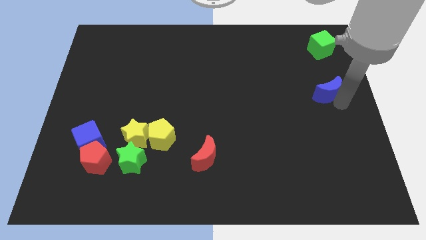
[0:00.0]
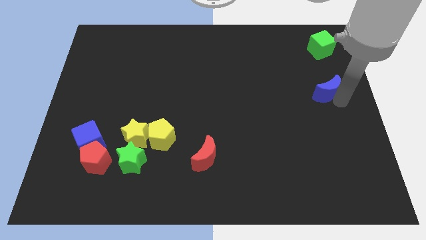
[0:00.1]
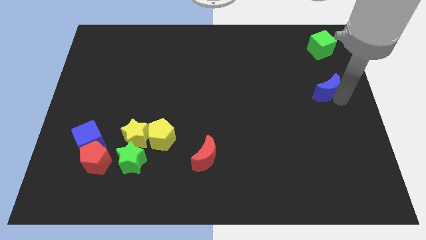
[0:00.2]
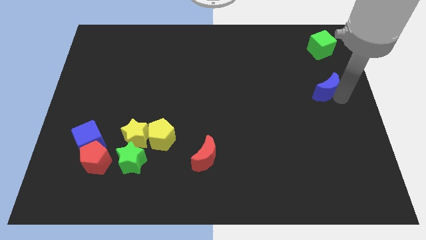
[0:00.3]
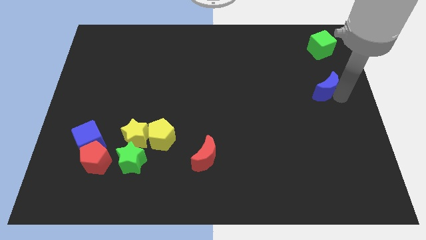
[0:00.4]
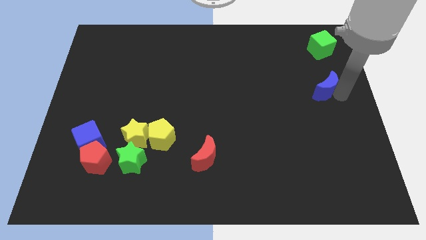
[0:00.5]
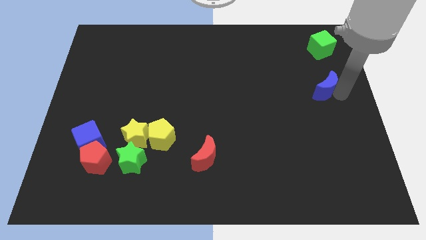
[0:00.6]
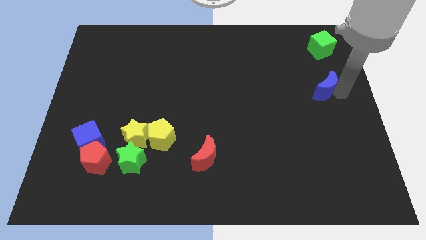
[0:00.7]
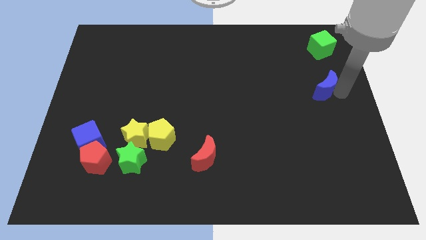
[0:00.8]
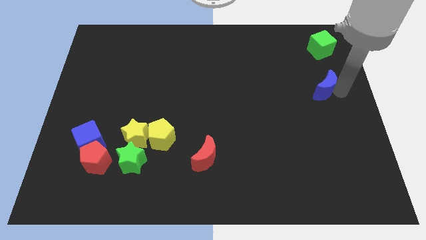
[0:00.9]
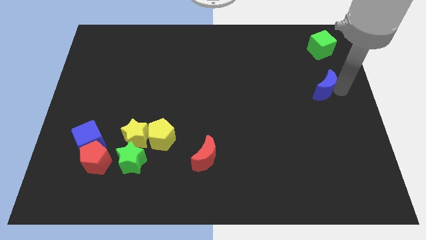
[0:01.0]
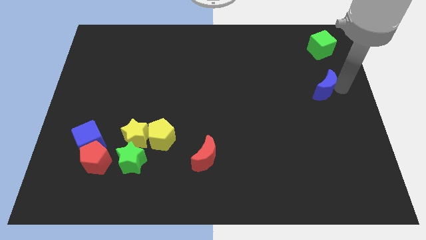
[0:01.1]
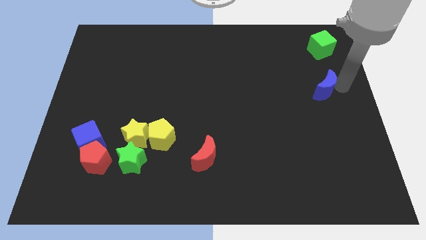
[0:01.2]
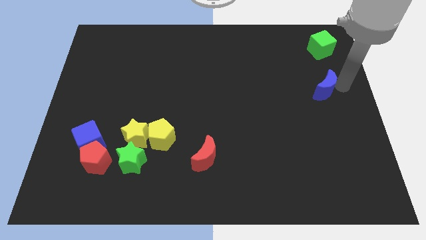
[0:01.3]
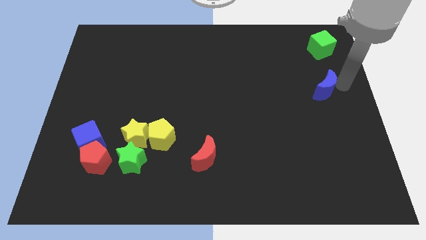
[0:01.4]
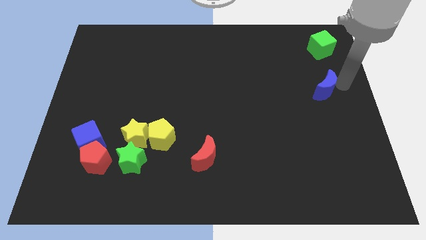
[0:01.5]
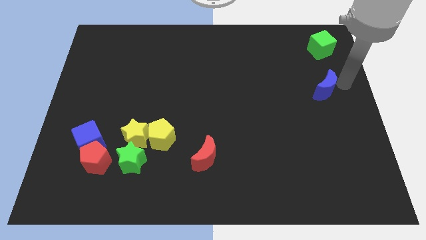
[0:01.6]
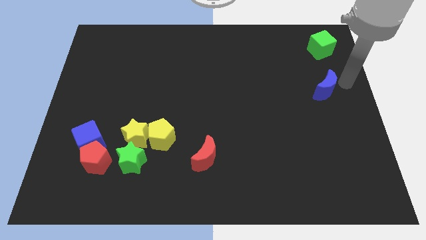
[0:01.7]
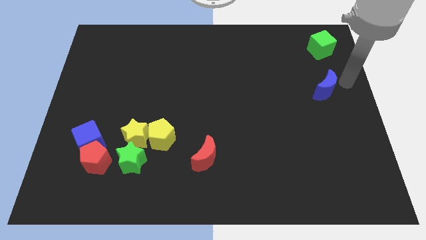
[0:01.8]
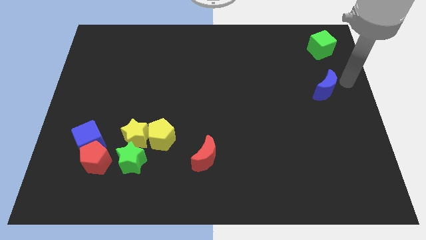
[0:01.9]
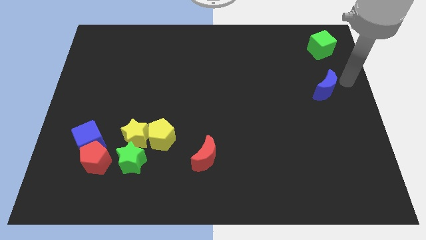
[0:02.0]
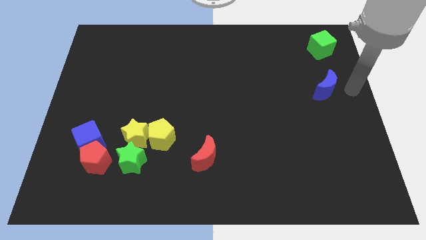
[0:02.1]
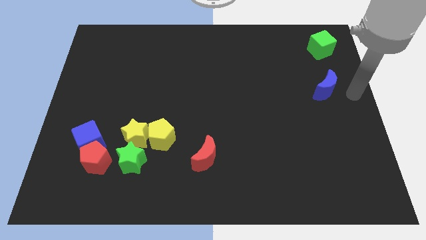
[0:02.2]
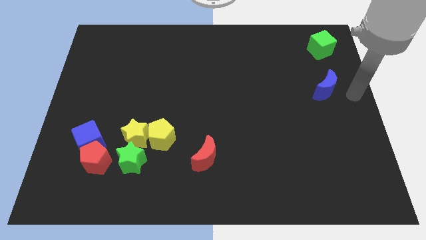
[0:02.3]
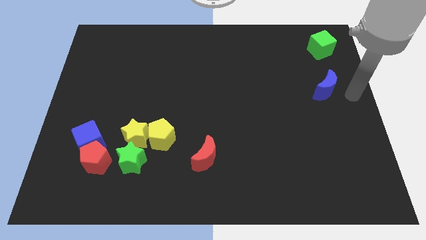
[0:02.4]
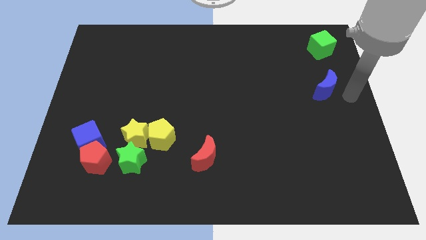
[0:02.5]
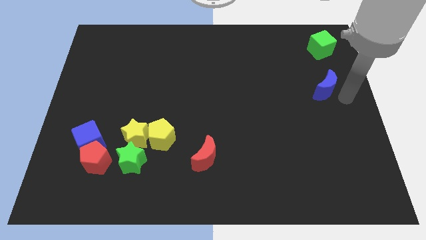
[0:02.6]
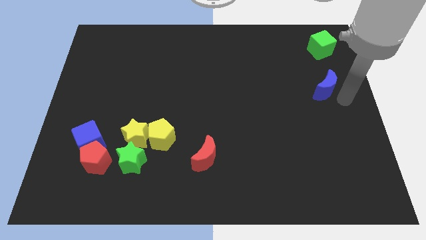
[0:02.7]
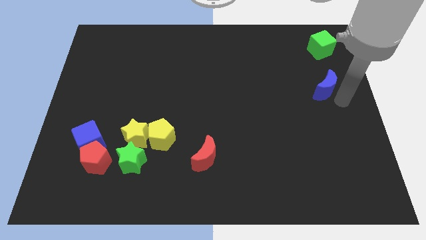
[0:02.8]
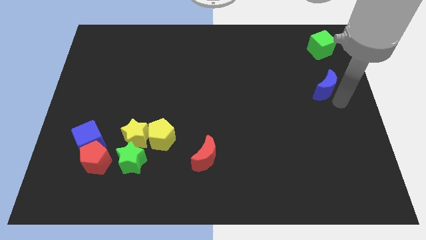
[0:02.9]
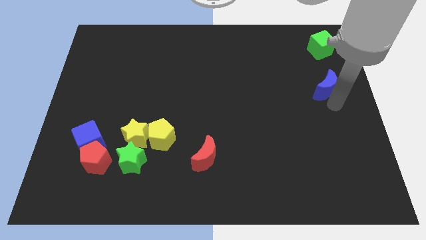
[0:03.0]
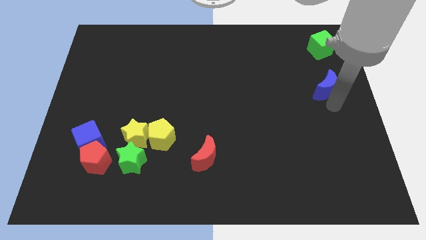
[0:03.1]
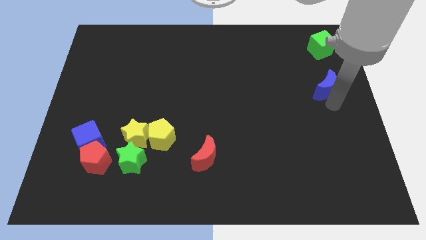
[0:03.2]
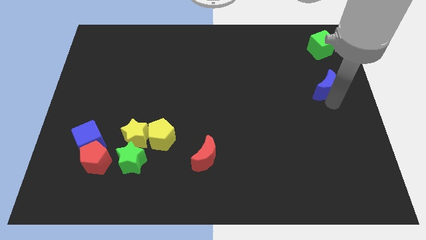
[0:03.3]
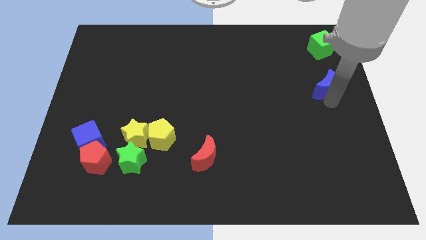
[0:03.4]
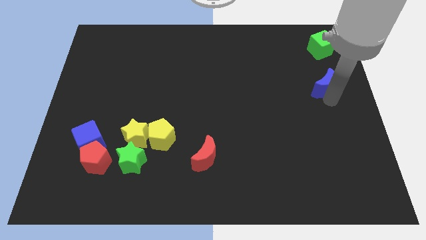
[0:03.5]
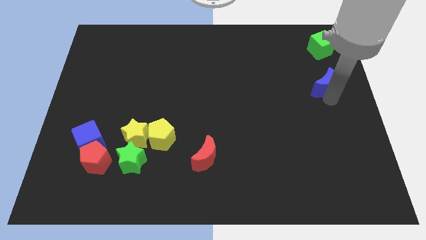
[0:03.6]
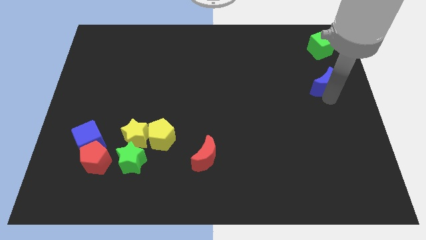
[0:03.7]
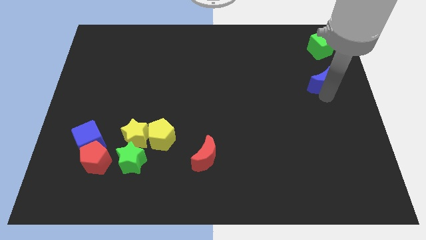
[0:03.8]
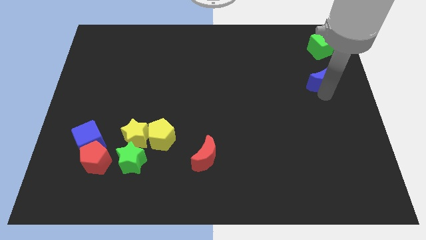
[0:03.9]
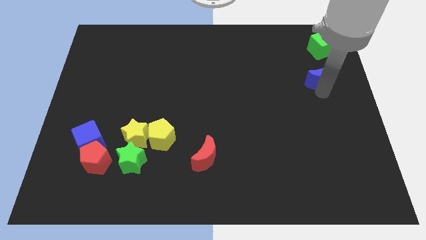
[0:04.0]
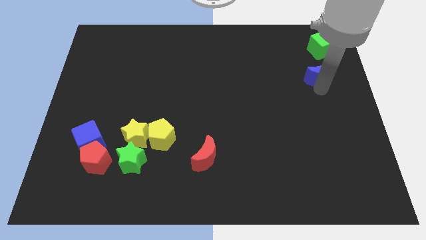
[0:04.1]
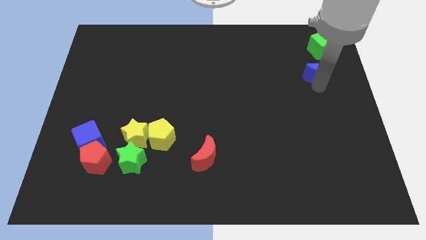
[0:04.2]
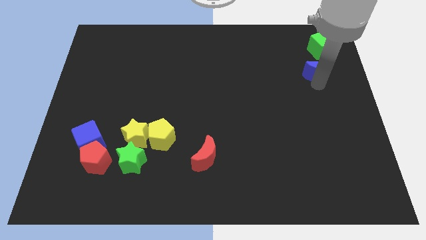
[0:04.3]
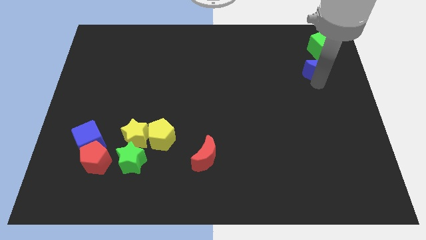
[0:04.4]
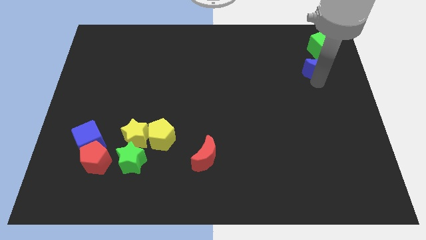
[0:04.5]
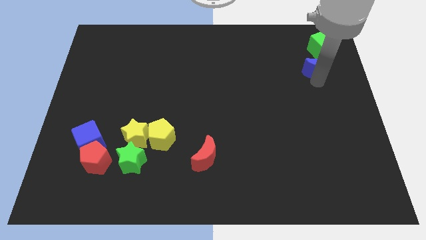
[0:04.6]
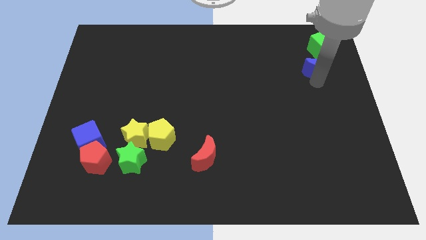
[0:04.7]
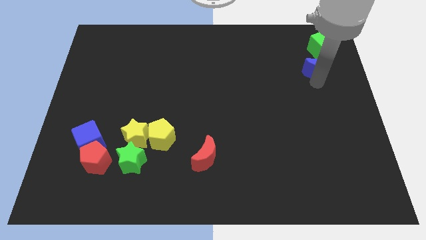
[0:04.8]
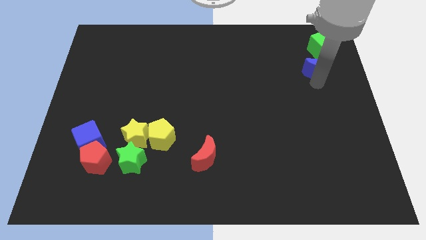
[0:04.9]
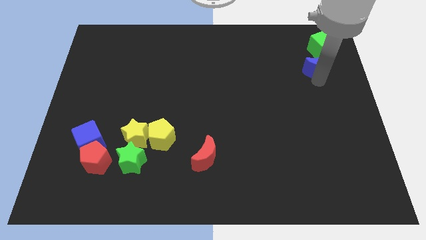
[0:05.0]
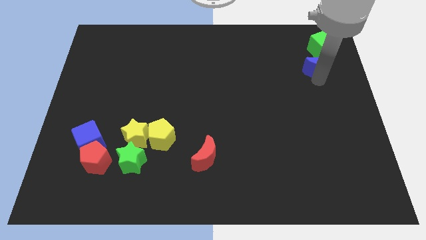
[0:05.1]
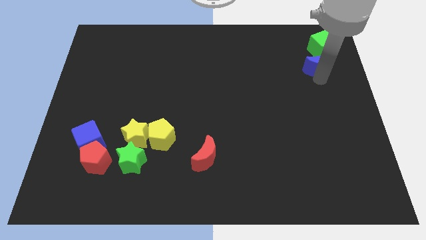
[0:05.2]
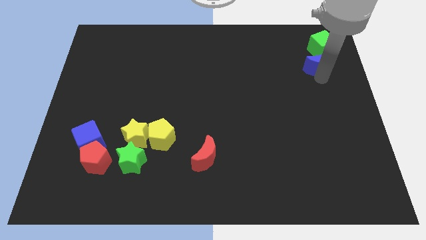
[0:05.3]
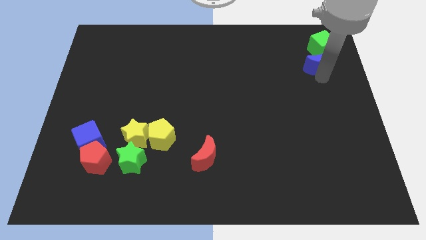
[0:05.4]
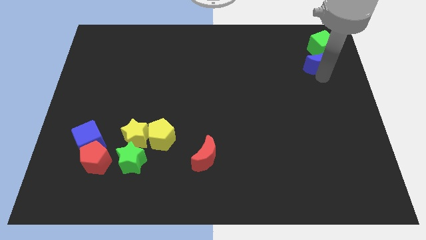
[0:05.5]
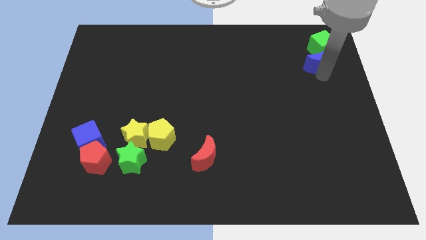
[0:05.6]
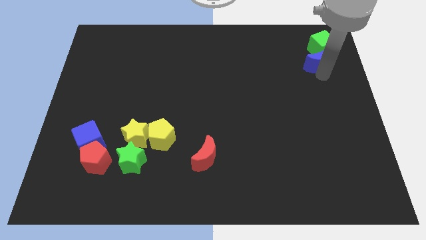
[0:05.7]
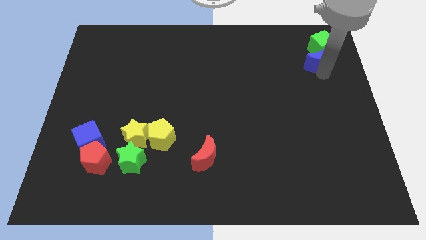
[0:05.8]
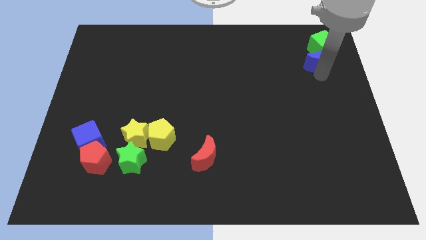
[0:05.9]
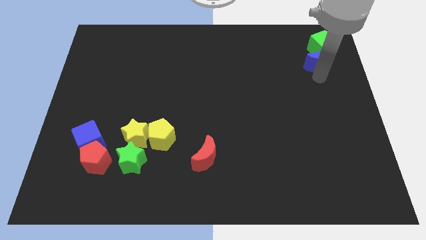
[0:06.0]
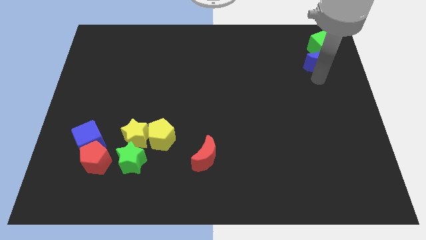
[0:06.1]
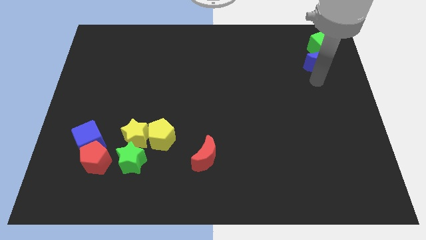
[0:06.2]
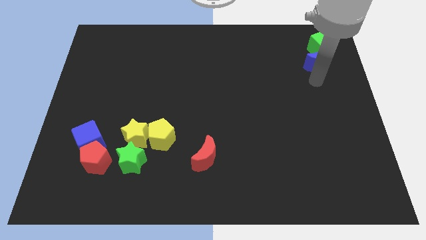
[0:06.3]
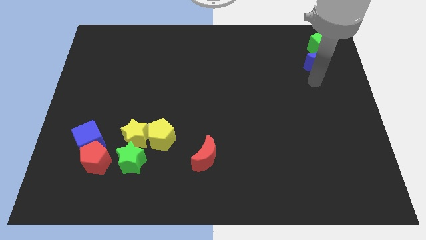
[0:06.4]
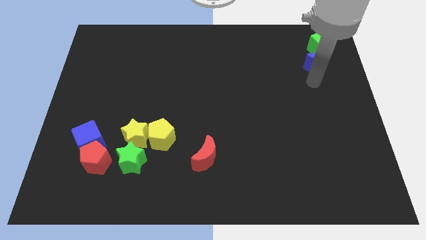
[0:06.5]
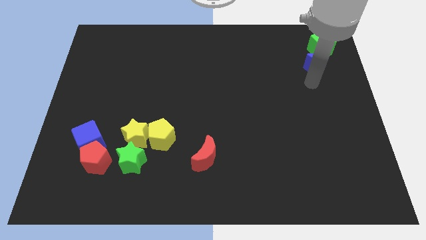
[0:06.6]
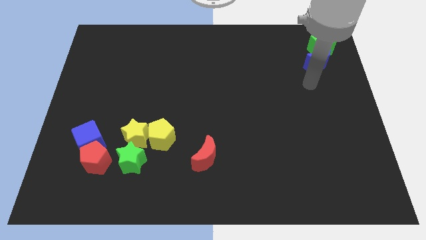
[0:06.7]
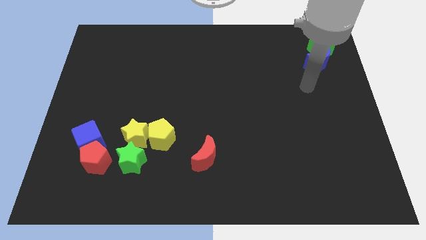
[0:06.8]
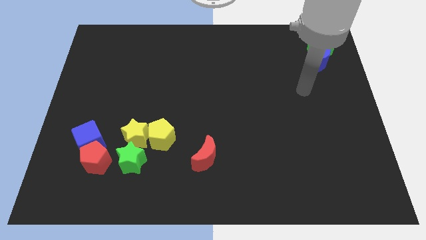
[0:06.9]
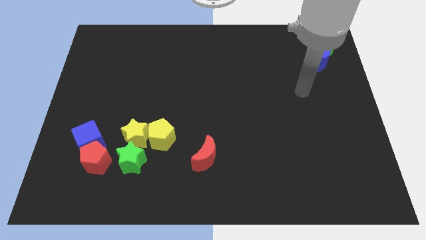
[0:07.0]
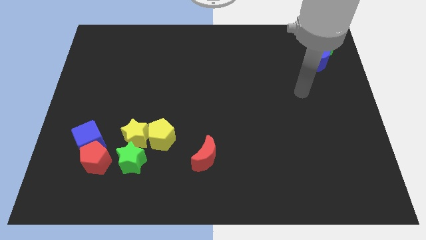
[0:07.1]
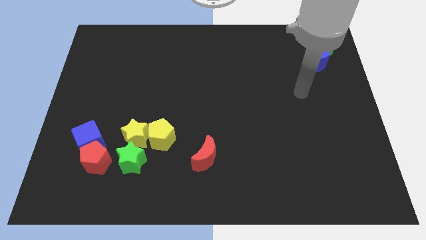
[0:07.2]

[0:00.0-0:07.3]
move the blue moon to the bottom of the green cube

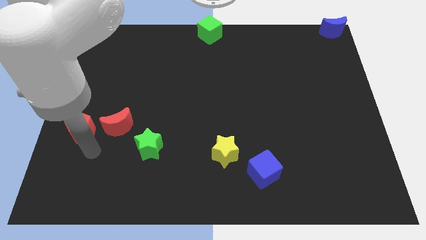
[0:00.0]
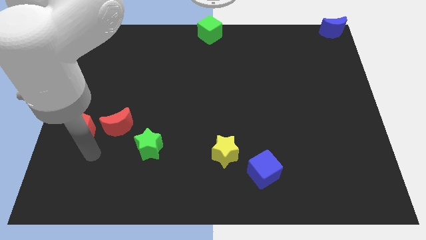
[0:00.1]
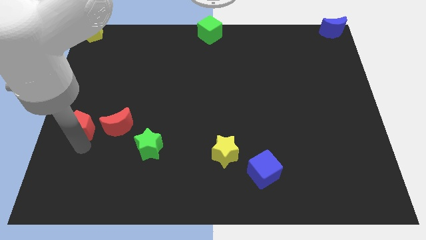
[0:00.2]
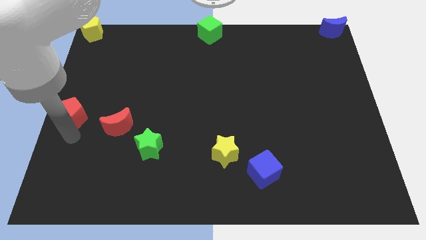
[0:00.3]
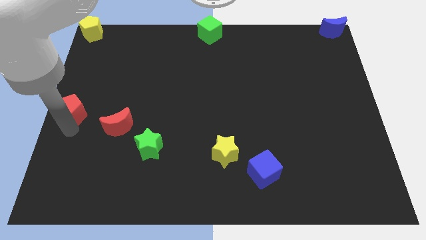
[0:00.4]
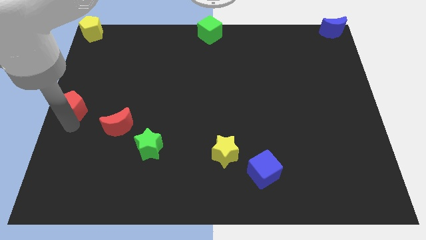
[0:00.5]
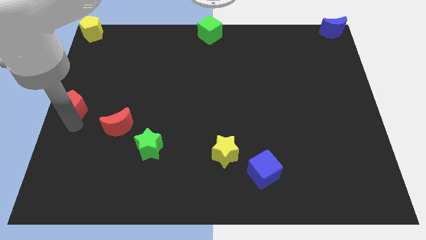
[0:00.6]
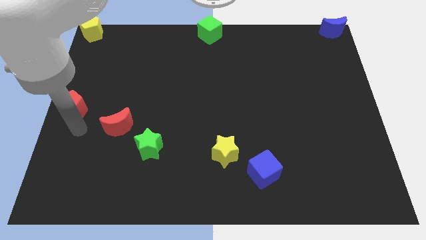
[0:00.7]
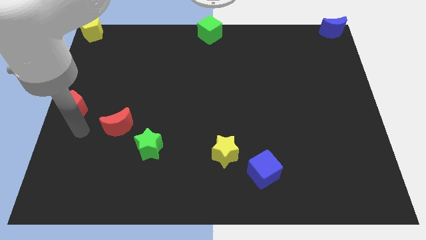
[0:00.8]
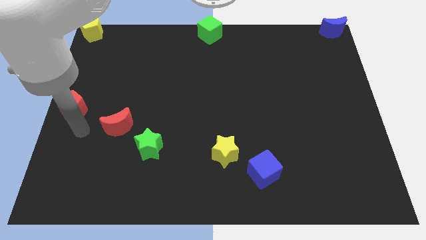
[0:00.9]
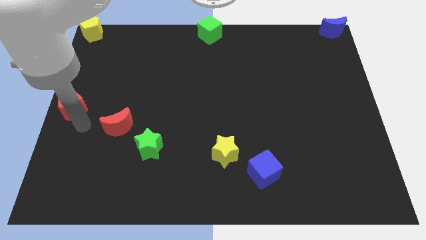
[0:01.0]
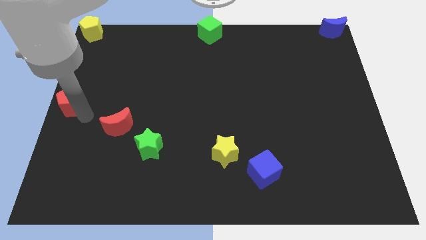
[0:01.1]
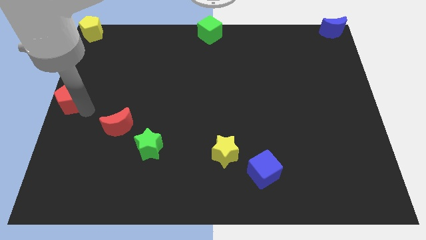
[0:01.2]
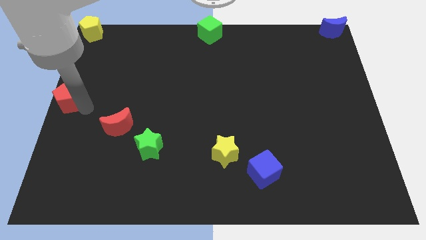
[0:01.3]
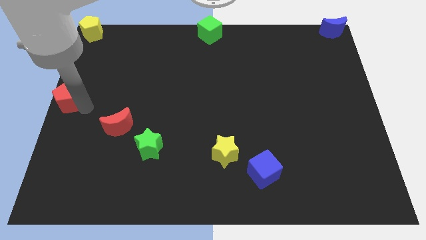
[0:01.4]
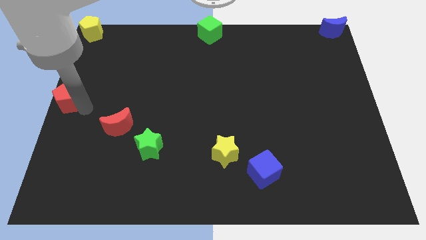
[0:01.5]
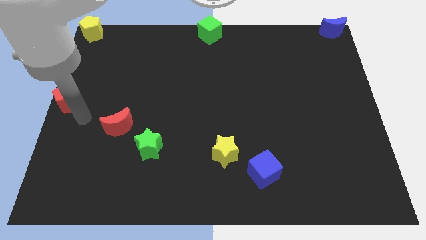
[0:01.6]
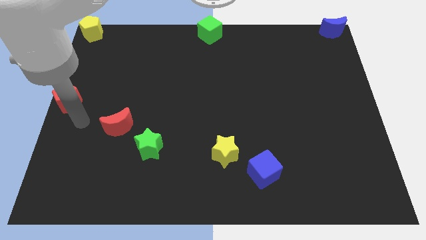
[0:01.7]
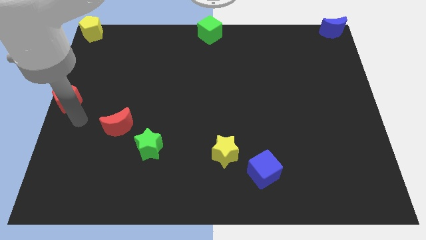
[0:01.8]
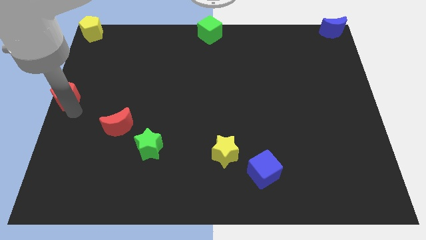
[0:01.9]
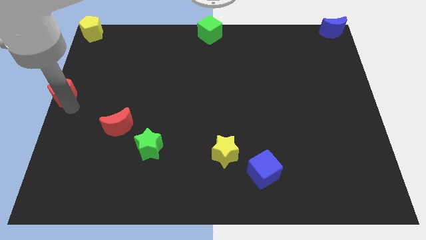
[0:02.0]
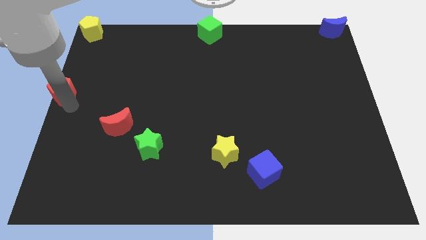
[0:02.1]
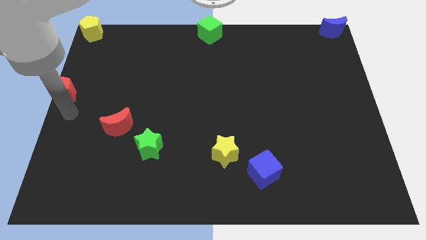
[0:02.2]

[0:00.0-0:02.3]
push the red pentagon to the center left
